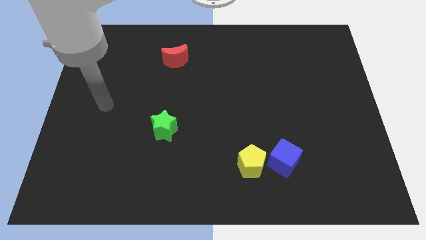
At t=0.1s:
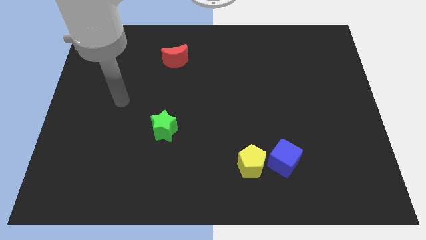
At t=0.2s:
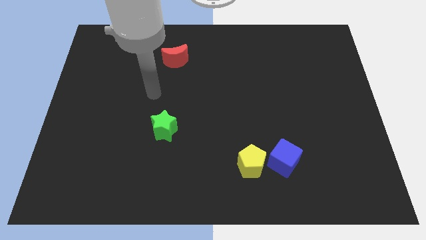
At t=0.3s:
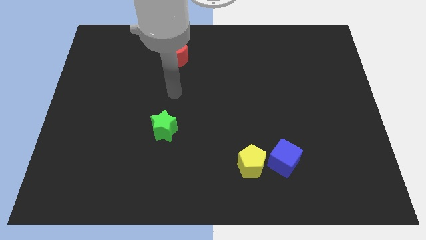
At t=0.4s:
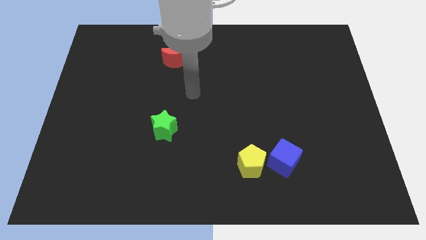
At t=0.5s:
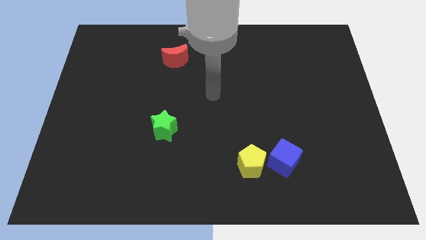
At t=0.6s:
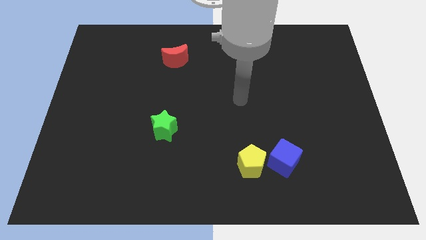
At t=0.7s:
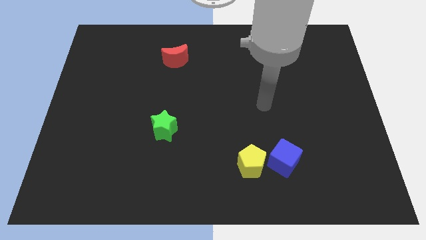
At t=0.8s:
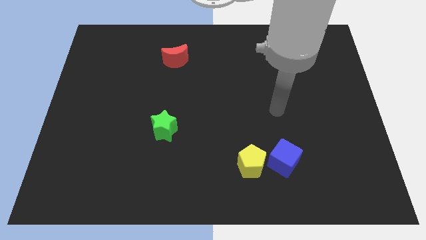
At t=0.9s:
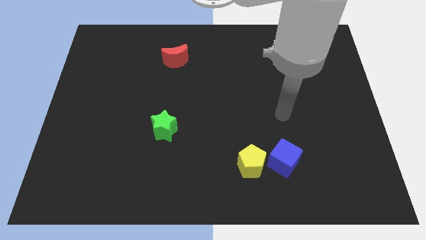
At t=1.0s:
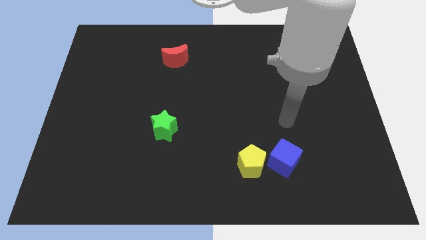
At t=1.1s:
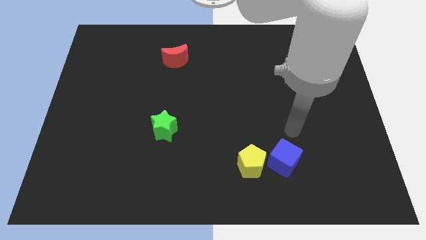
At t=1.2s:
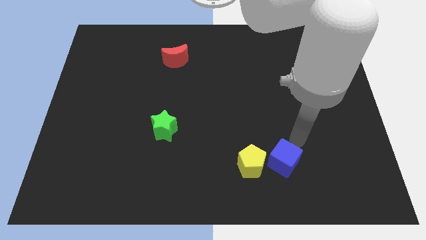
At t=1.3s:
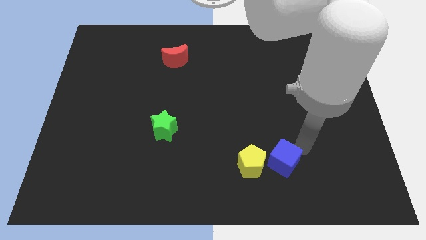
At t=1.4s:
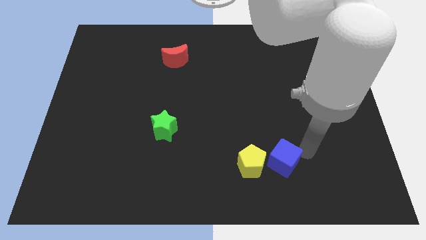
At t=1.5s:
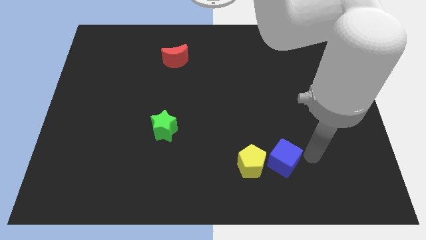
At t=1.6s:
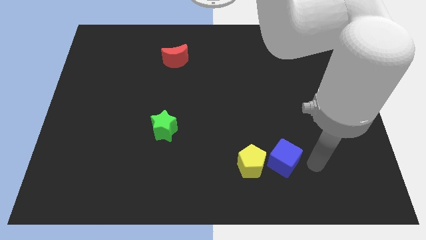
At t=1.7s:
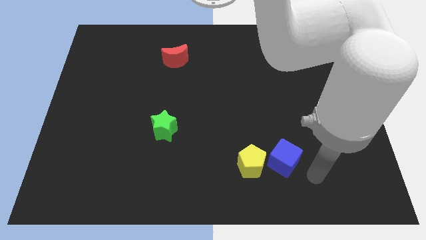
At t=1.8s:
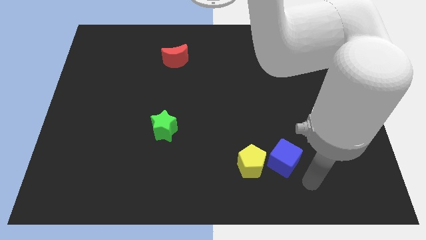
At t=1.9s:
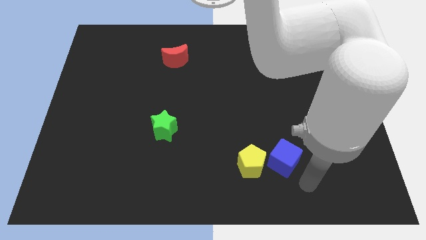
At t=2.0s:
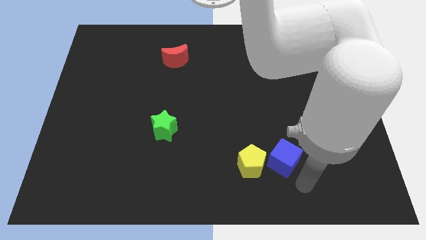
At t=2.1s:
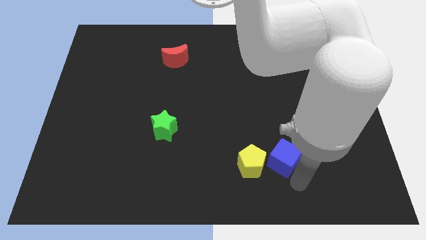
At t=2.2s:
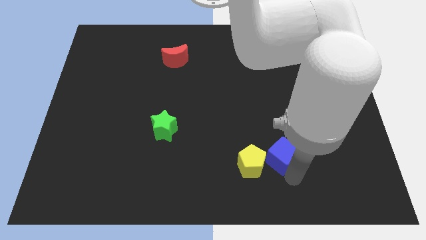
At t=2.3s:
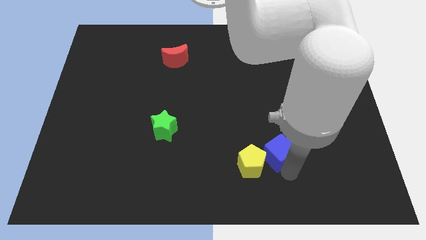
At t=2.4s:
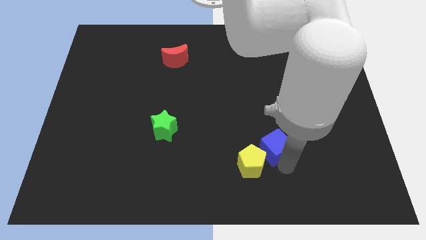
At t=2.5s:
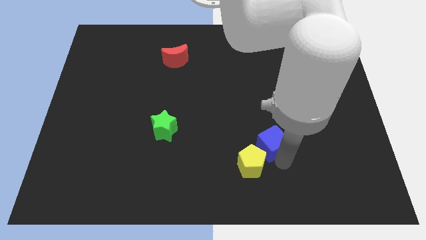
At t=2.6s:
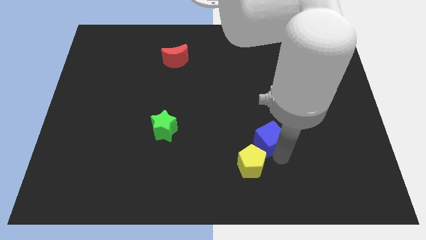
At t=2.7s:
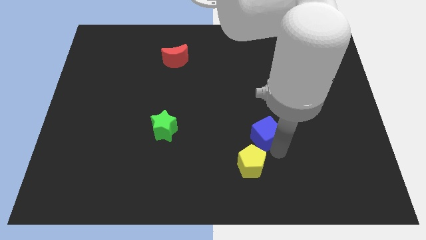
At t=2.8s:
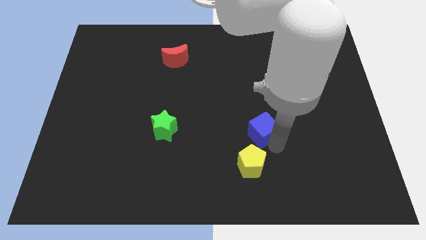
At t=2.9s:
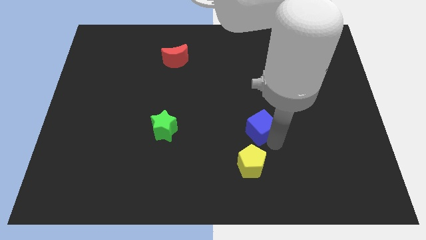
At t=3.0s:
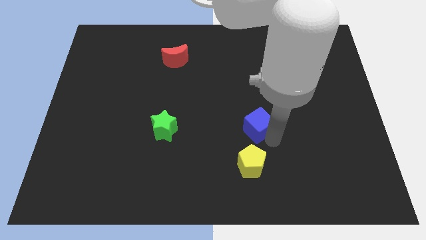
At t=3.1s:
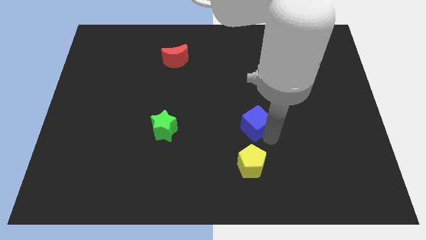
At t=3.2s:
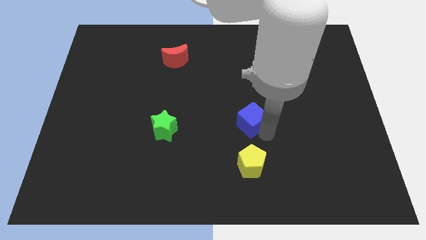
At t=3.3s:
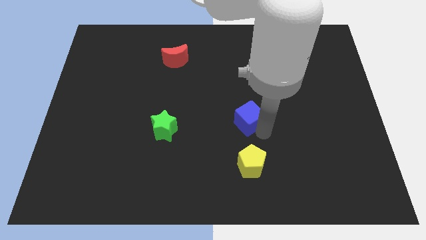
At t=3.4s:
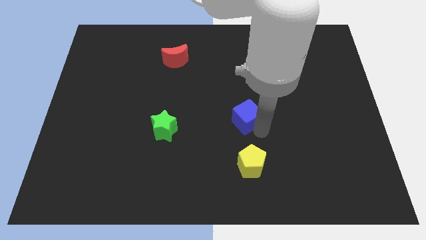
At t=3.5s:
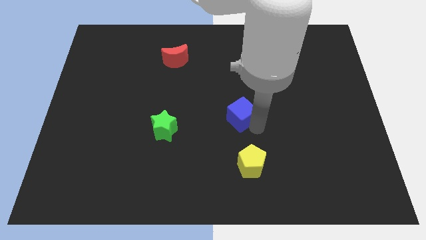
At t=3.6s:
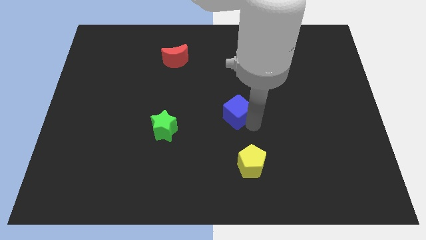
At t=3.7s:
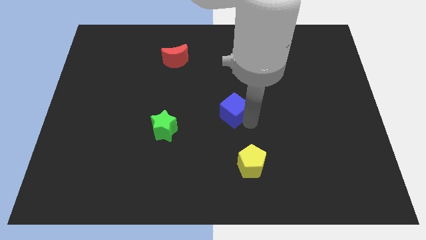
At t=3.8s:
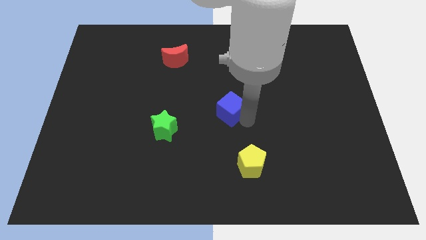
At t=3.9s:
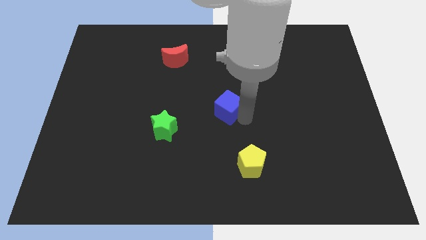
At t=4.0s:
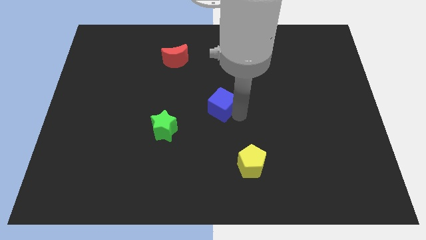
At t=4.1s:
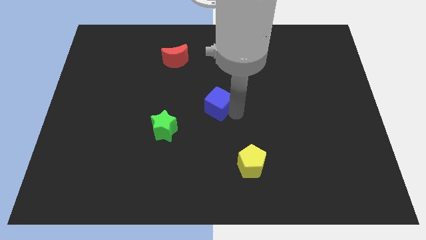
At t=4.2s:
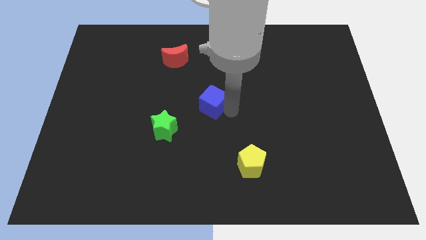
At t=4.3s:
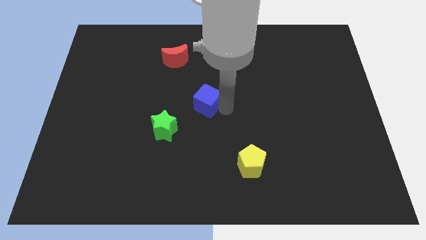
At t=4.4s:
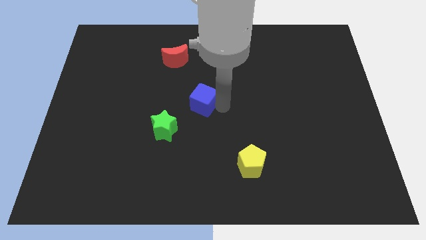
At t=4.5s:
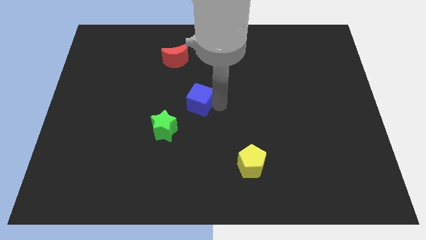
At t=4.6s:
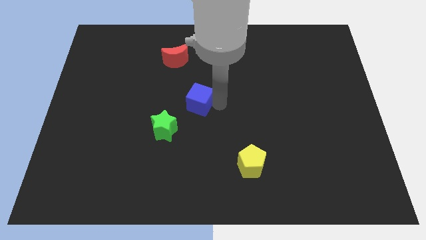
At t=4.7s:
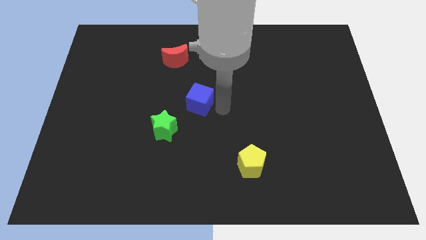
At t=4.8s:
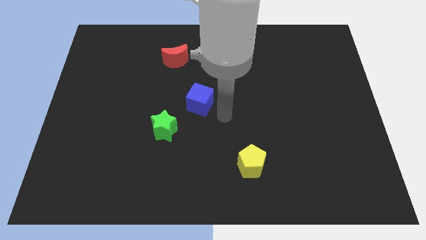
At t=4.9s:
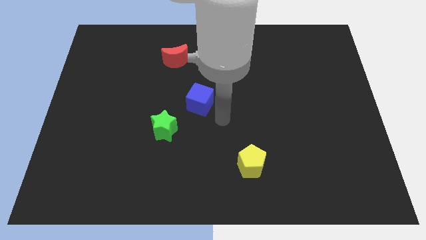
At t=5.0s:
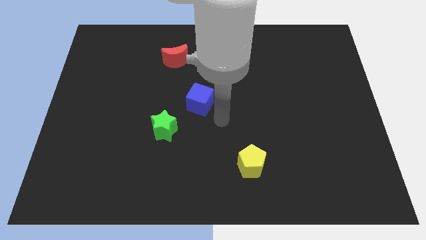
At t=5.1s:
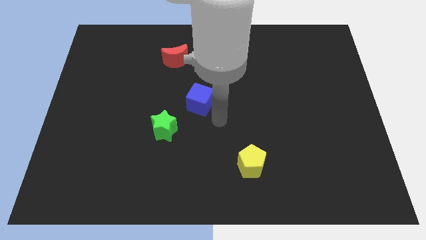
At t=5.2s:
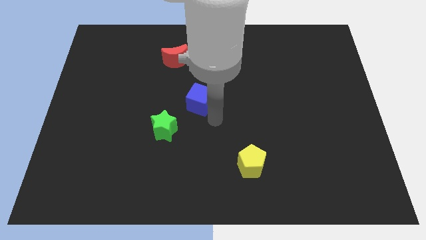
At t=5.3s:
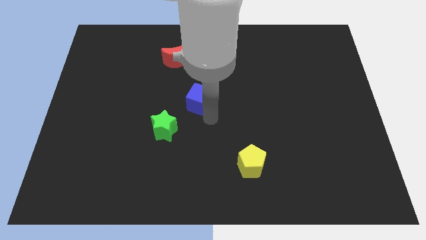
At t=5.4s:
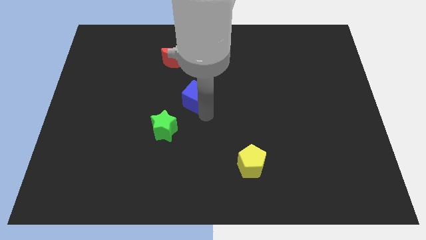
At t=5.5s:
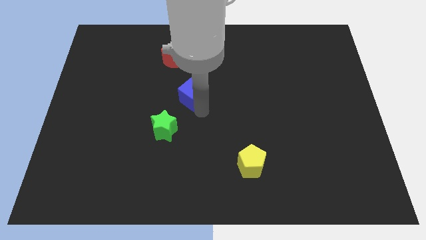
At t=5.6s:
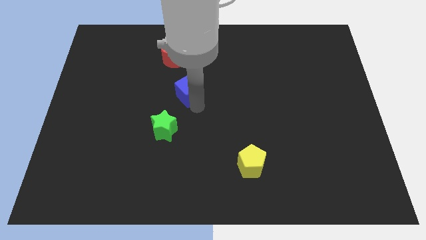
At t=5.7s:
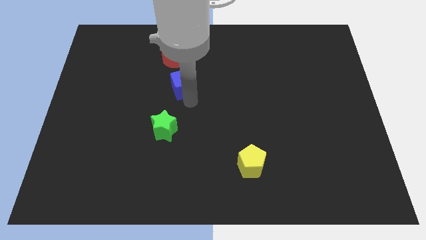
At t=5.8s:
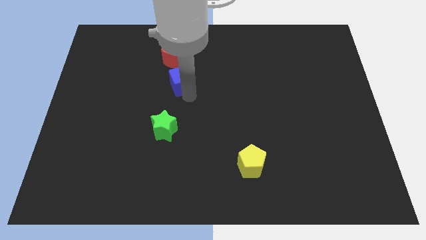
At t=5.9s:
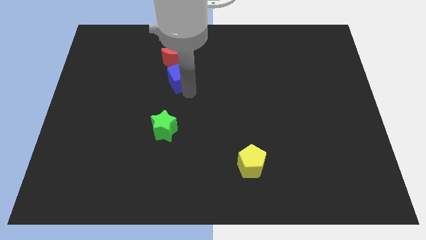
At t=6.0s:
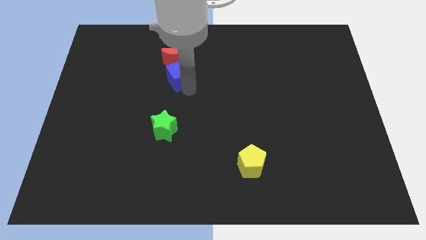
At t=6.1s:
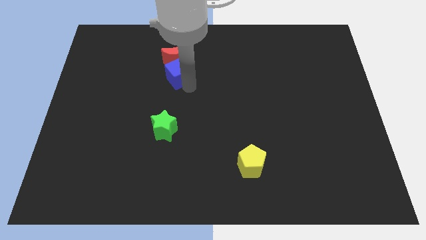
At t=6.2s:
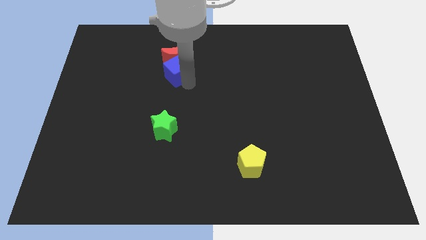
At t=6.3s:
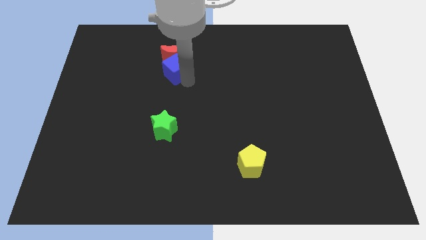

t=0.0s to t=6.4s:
move the blue block towards the moon

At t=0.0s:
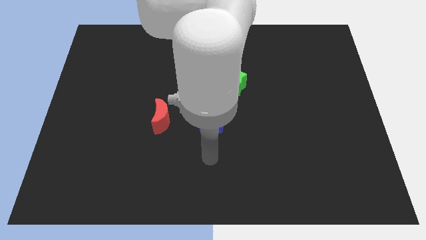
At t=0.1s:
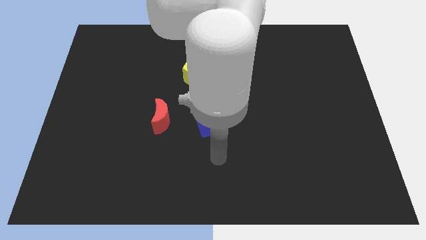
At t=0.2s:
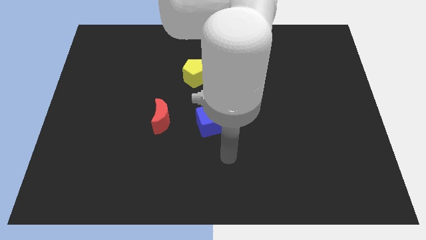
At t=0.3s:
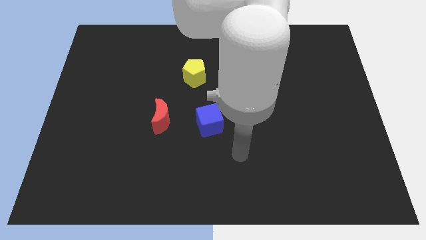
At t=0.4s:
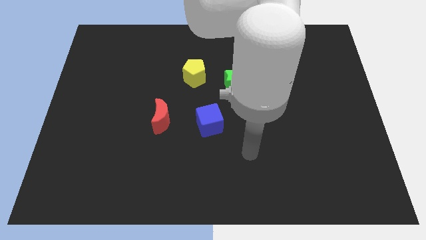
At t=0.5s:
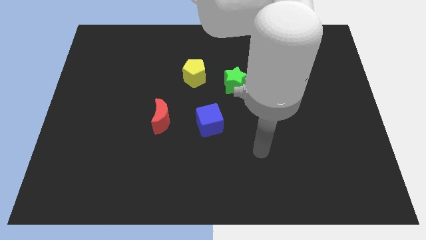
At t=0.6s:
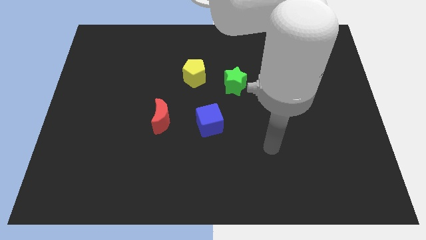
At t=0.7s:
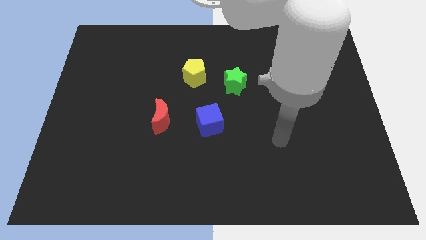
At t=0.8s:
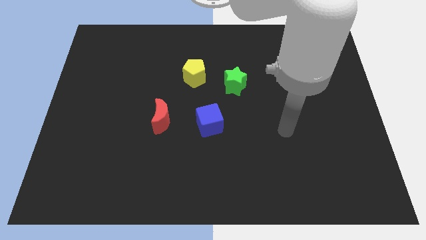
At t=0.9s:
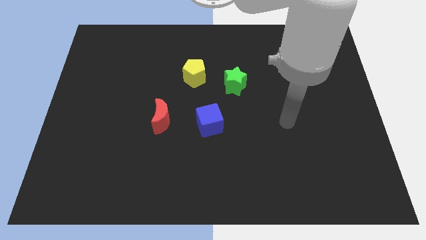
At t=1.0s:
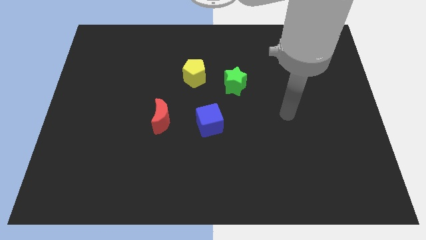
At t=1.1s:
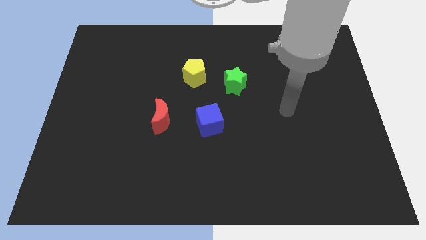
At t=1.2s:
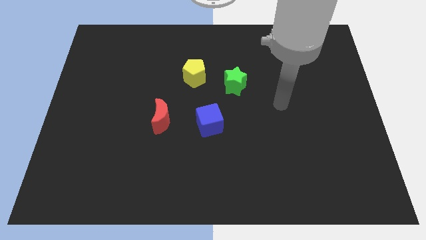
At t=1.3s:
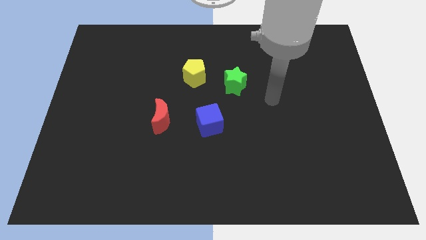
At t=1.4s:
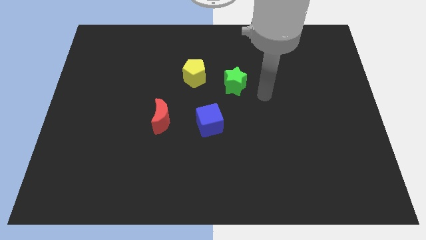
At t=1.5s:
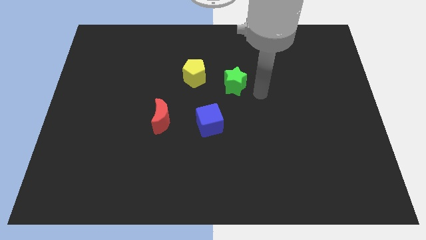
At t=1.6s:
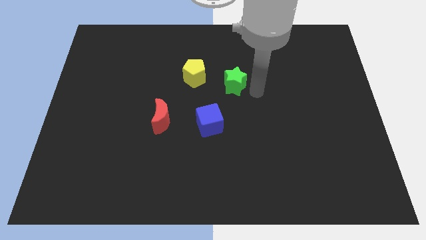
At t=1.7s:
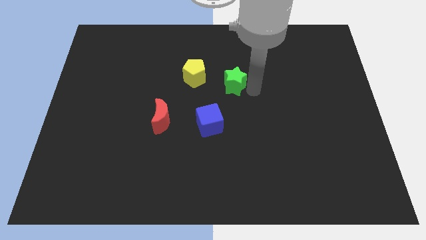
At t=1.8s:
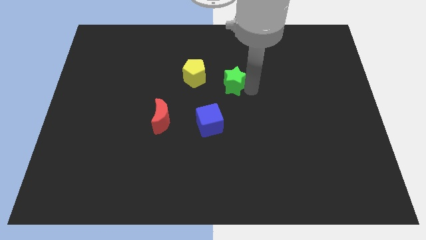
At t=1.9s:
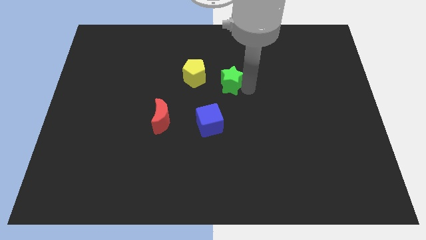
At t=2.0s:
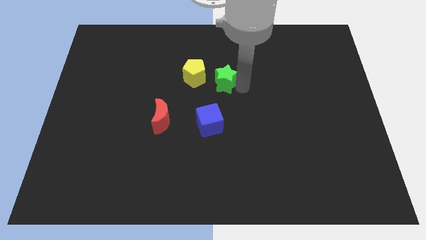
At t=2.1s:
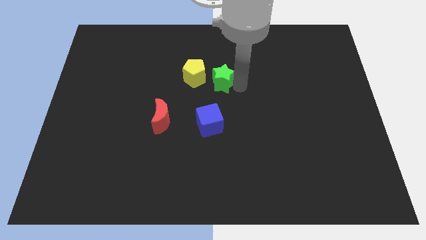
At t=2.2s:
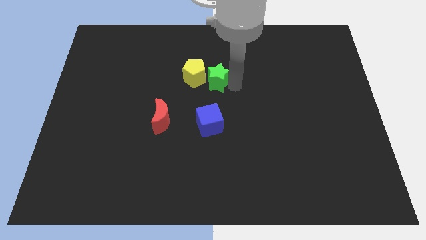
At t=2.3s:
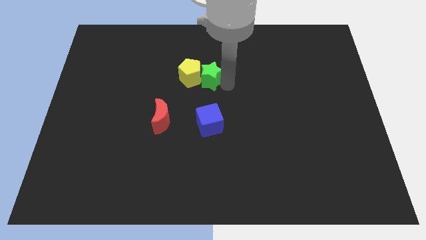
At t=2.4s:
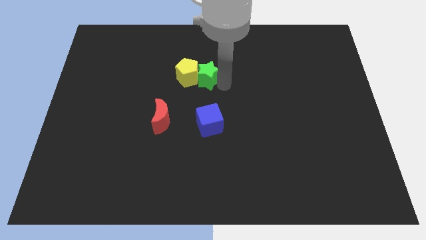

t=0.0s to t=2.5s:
move the green star towards the pentagon
